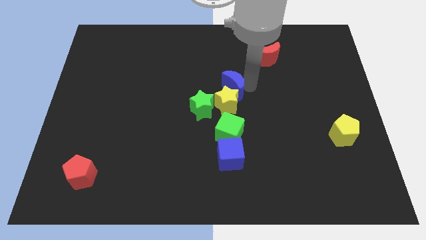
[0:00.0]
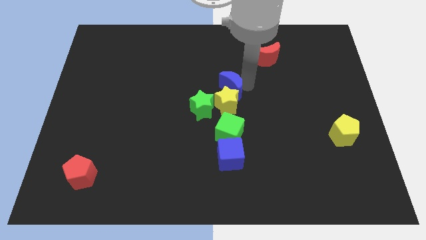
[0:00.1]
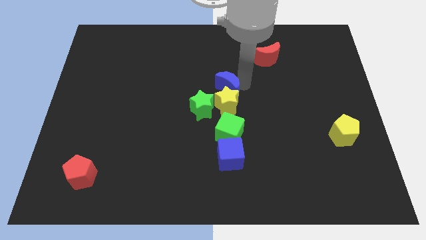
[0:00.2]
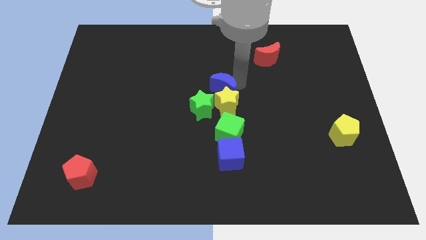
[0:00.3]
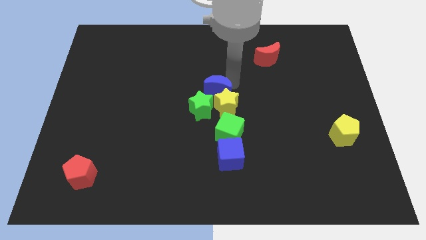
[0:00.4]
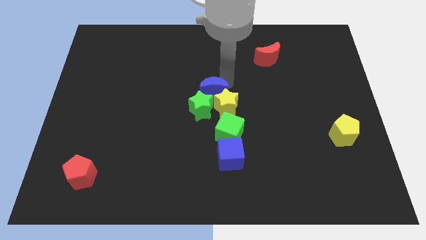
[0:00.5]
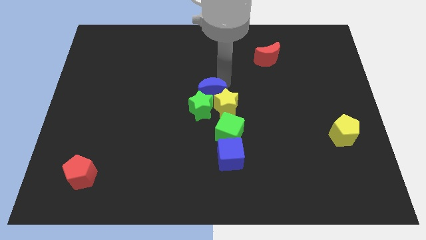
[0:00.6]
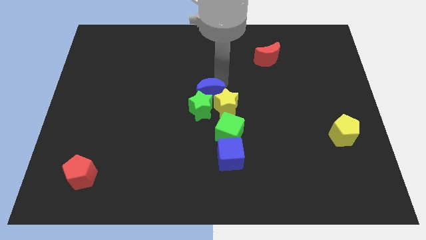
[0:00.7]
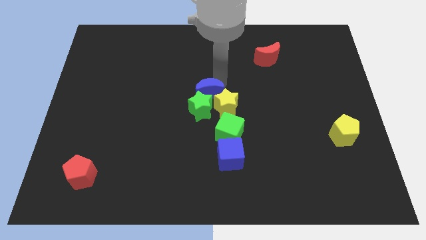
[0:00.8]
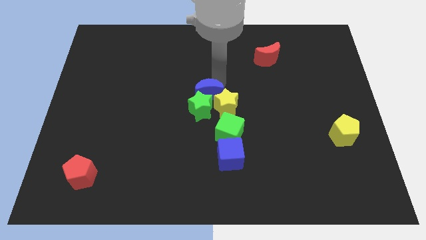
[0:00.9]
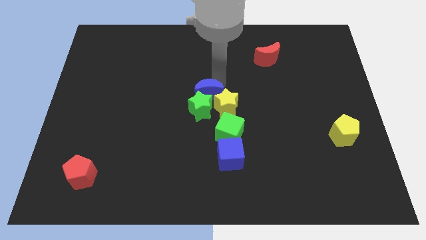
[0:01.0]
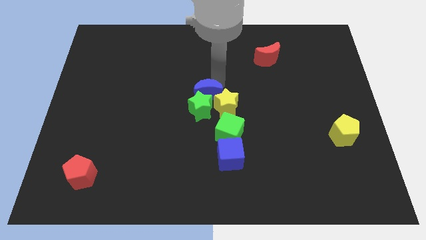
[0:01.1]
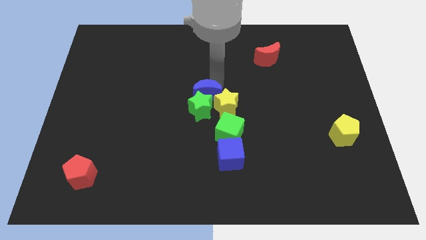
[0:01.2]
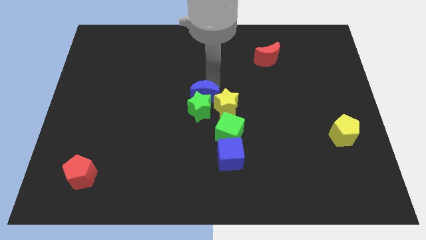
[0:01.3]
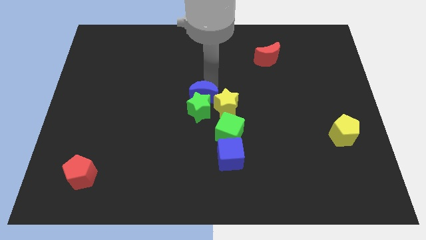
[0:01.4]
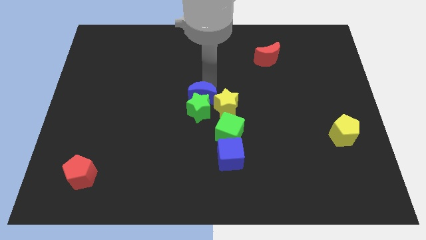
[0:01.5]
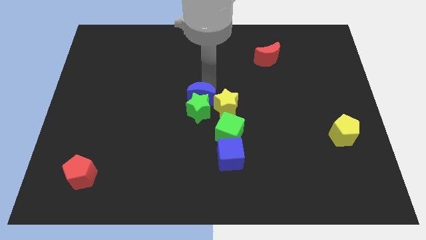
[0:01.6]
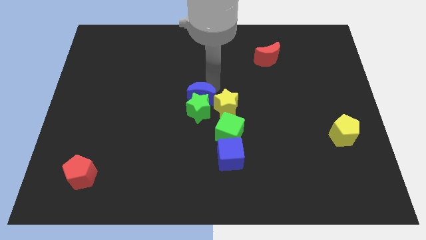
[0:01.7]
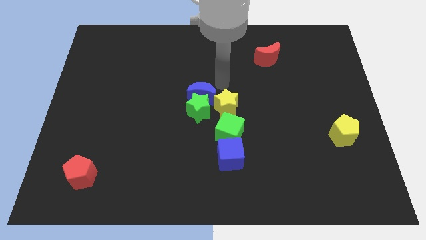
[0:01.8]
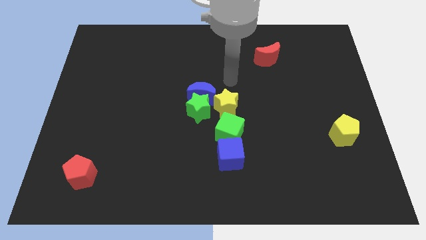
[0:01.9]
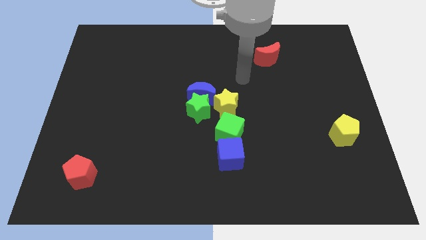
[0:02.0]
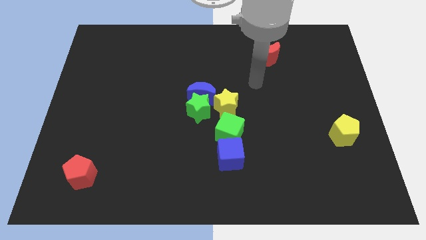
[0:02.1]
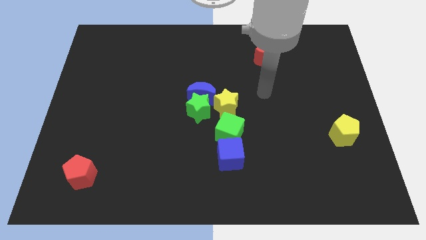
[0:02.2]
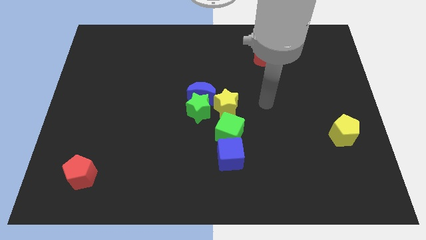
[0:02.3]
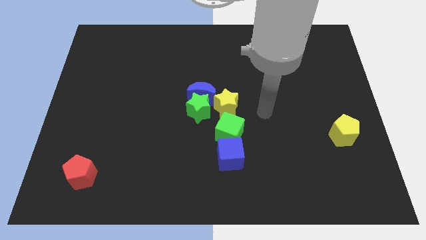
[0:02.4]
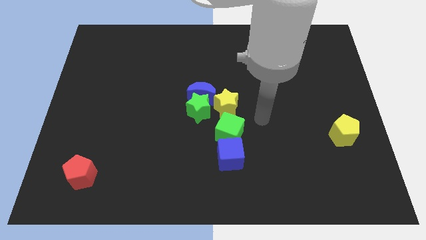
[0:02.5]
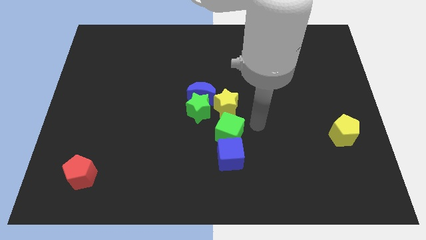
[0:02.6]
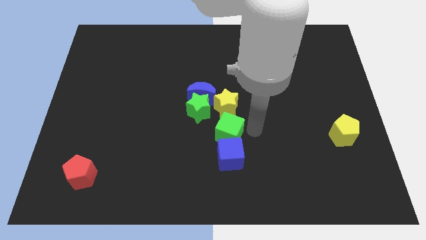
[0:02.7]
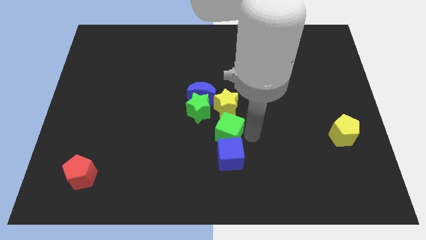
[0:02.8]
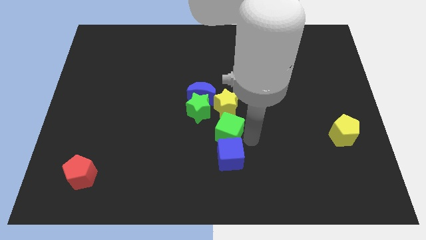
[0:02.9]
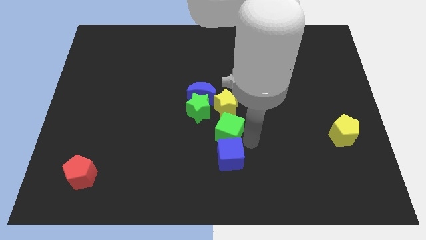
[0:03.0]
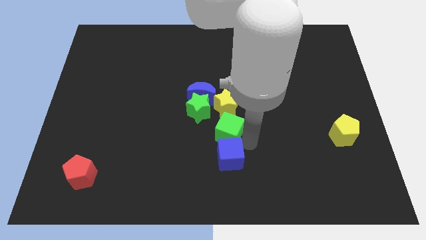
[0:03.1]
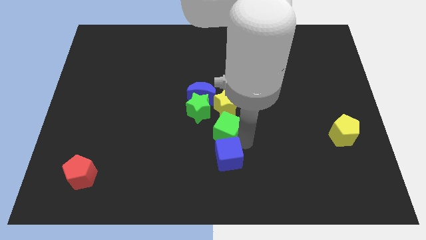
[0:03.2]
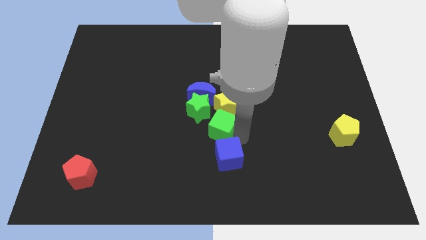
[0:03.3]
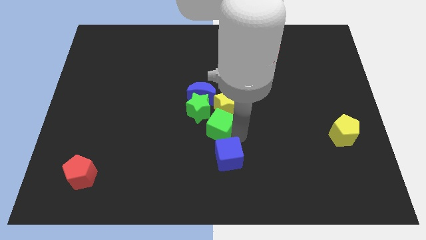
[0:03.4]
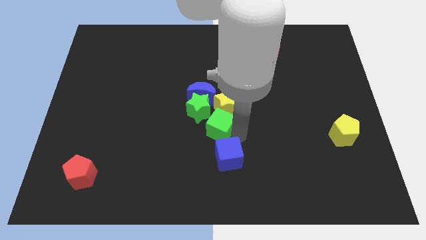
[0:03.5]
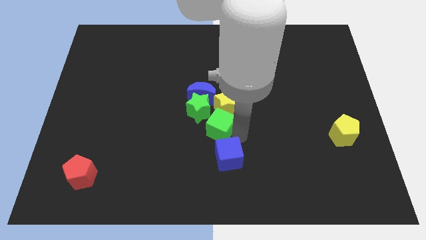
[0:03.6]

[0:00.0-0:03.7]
adjust blue moon and green cube at the center of the board

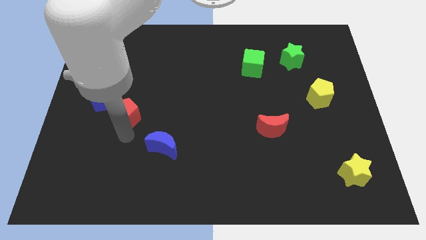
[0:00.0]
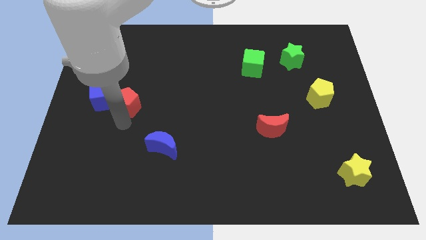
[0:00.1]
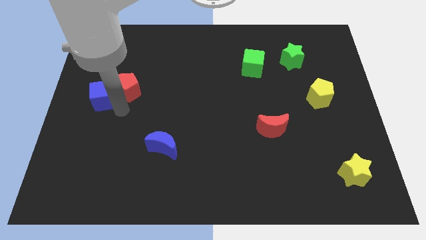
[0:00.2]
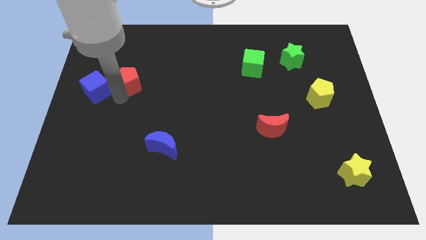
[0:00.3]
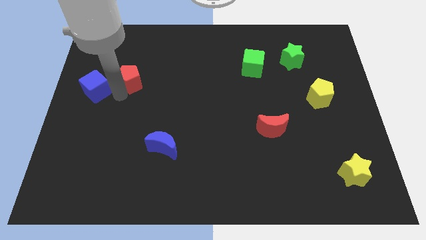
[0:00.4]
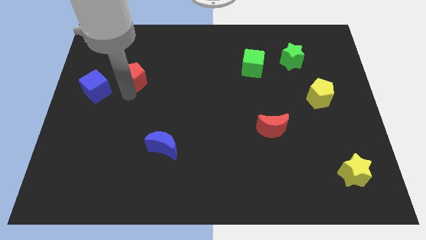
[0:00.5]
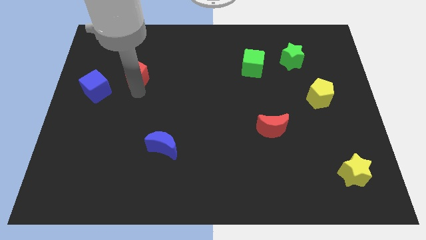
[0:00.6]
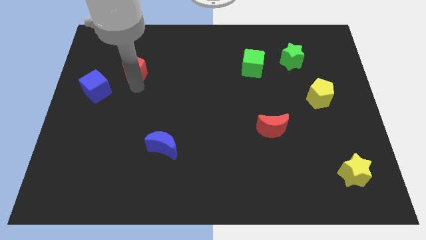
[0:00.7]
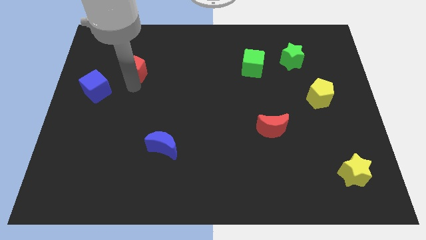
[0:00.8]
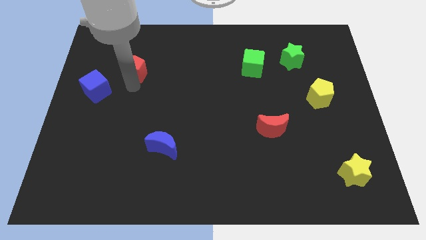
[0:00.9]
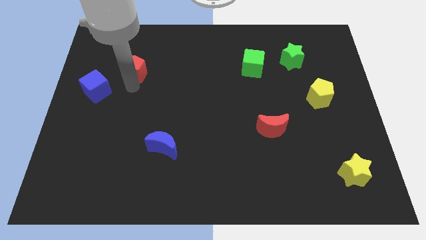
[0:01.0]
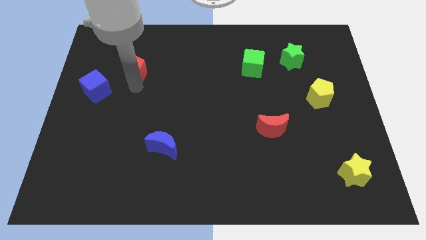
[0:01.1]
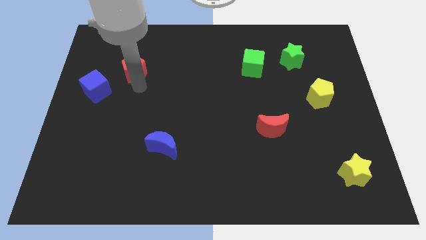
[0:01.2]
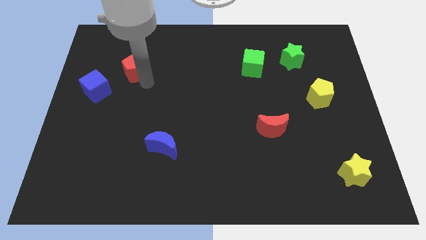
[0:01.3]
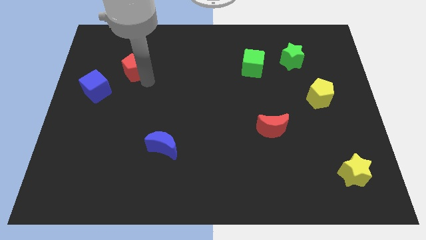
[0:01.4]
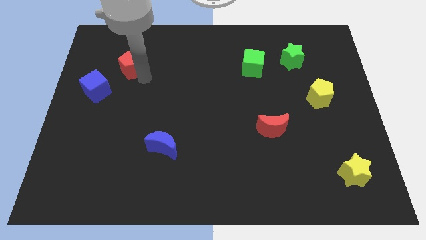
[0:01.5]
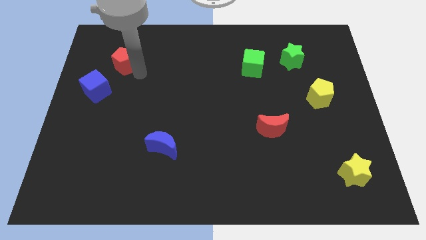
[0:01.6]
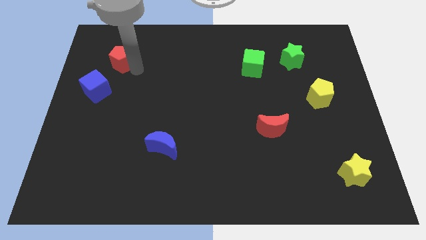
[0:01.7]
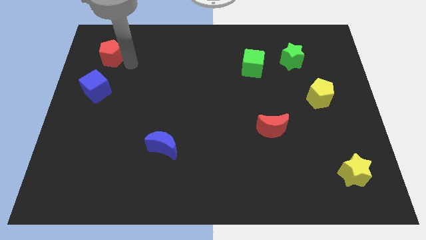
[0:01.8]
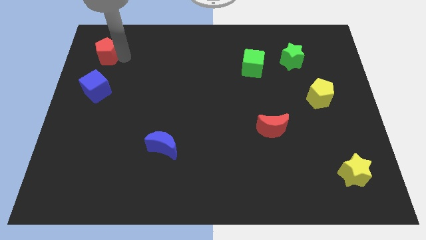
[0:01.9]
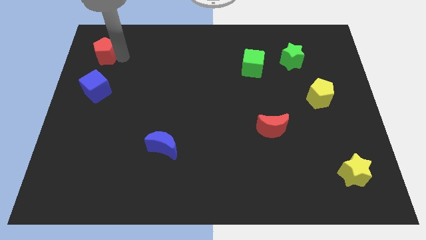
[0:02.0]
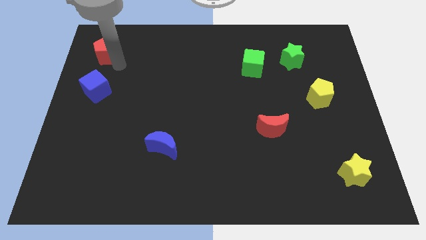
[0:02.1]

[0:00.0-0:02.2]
slide the red pentagon to the top of the blue cube

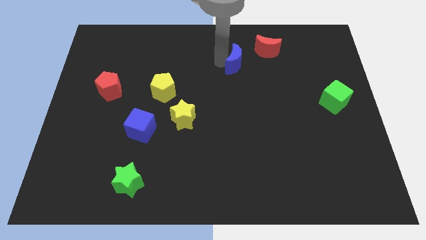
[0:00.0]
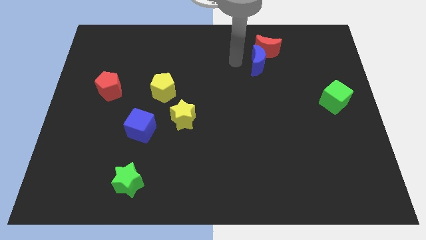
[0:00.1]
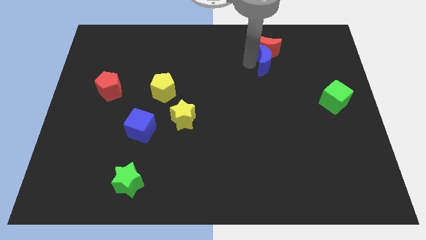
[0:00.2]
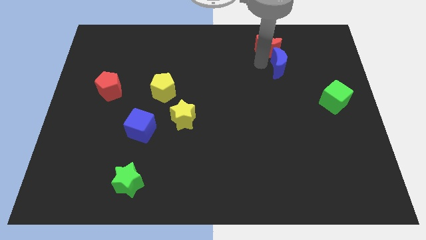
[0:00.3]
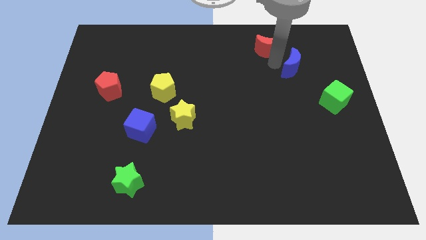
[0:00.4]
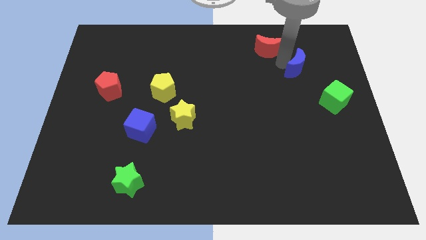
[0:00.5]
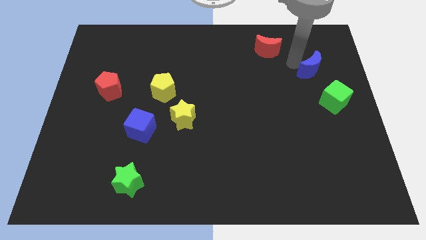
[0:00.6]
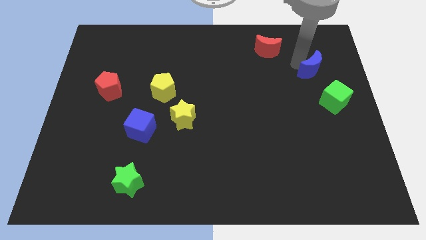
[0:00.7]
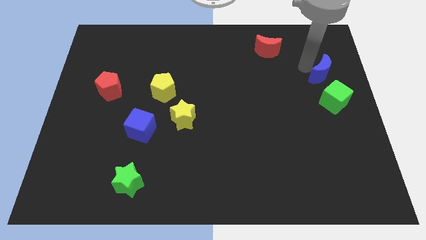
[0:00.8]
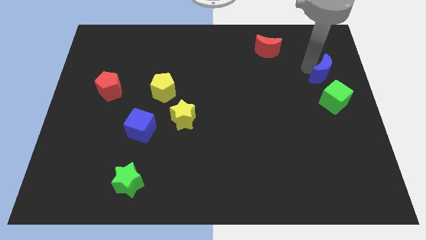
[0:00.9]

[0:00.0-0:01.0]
move away blue moon from red moon

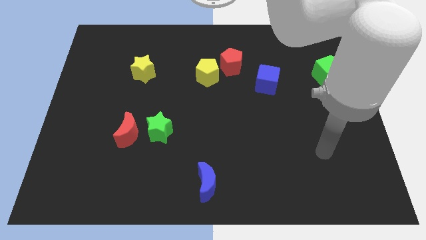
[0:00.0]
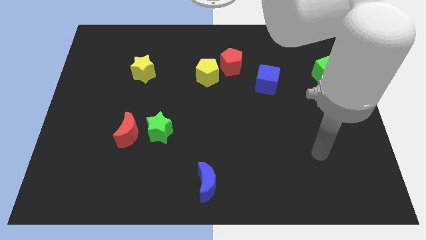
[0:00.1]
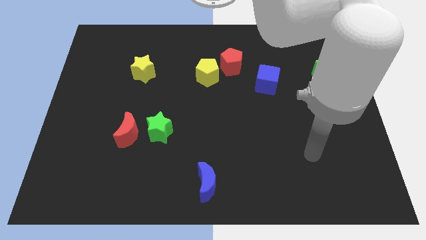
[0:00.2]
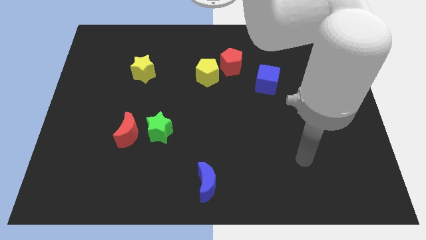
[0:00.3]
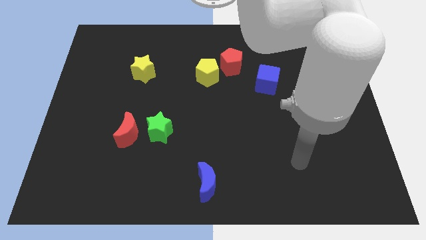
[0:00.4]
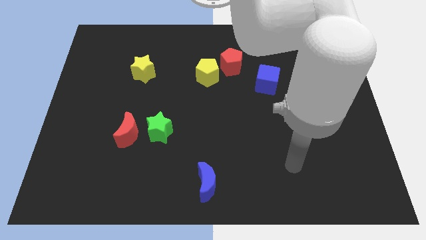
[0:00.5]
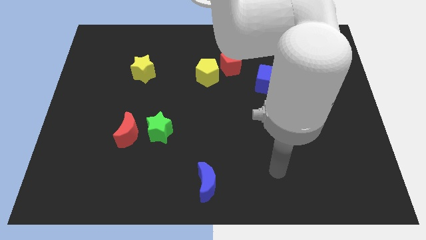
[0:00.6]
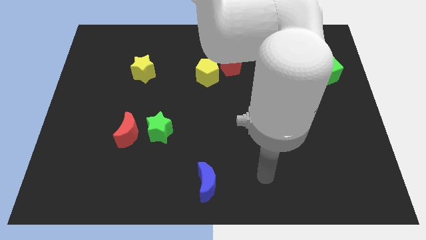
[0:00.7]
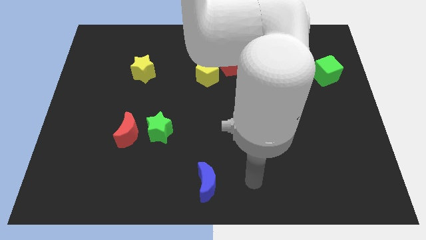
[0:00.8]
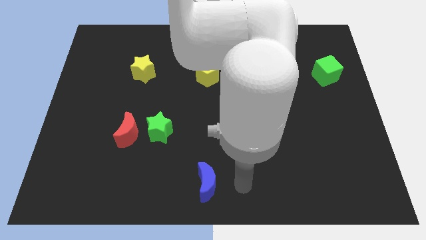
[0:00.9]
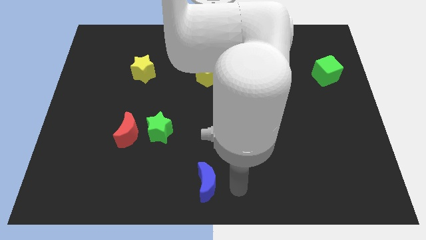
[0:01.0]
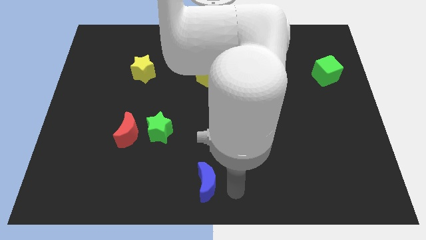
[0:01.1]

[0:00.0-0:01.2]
move your arm to the right of the blue moon

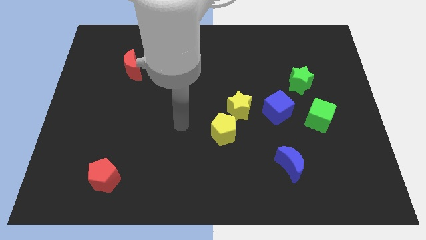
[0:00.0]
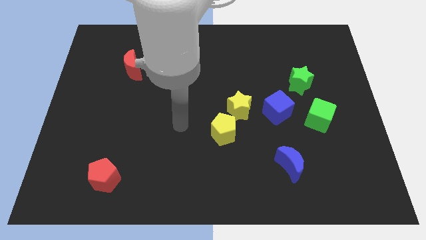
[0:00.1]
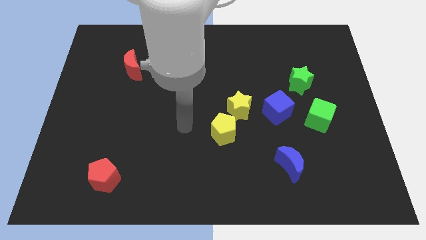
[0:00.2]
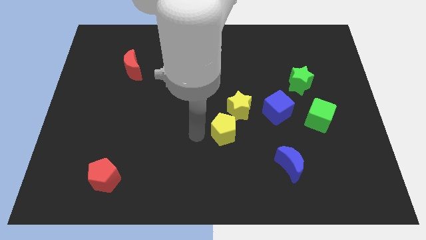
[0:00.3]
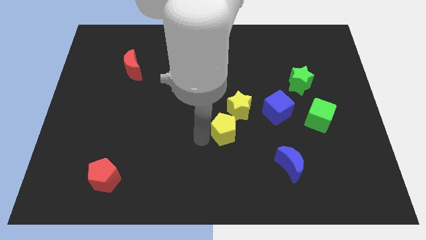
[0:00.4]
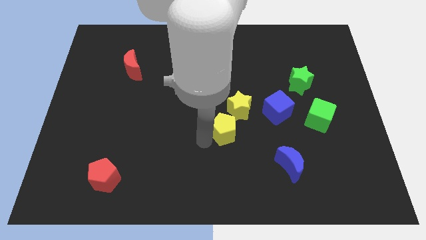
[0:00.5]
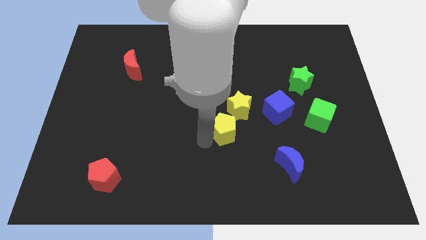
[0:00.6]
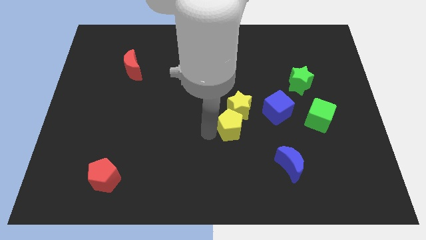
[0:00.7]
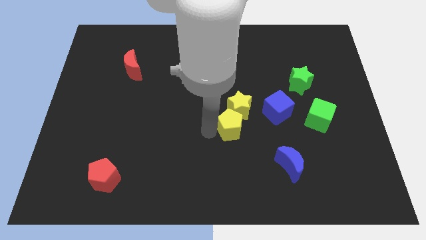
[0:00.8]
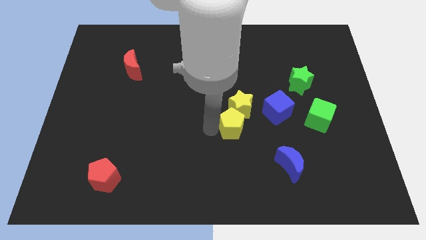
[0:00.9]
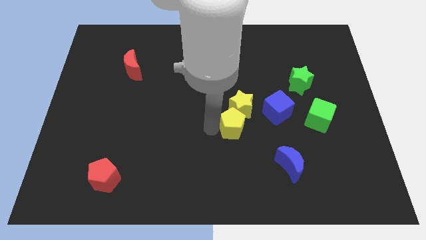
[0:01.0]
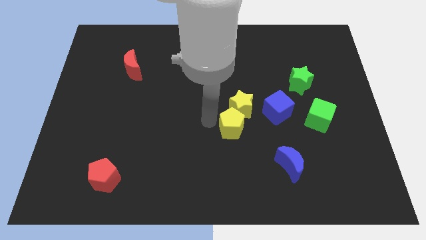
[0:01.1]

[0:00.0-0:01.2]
push the yellow pentagon into the yellow star
